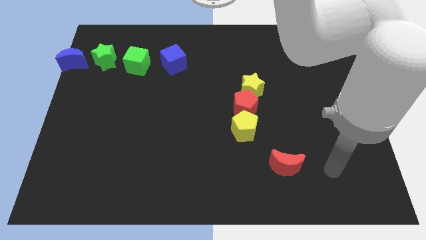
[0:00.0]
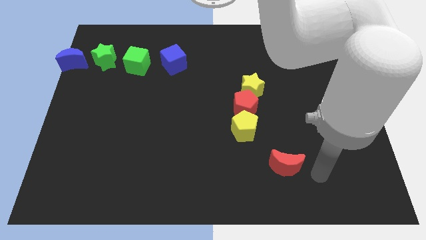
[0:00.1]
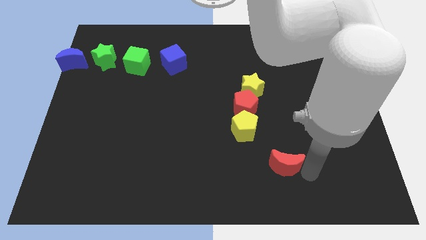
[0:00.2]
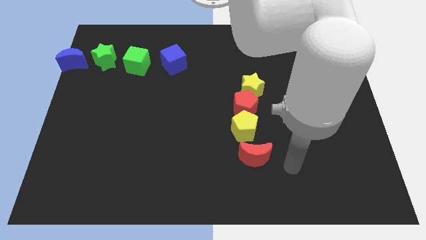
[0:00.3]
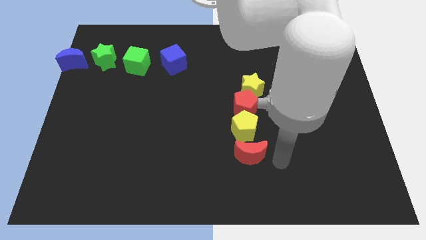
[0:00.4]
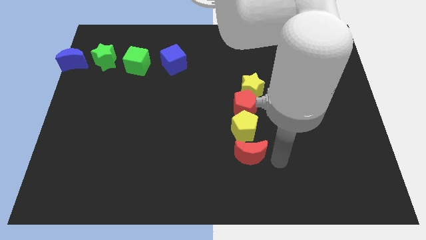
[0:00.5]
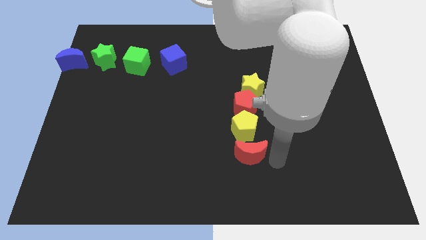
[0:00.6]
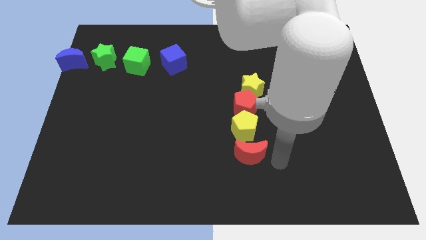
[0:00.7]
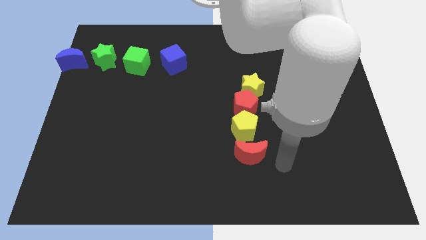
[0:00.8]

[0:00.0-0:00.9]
put the red moon at the bottom of yellow pentagon

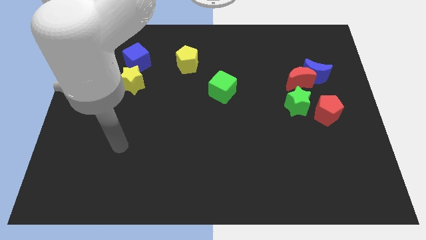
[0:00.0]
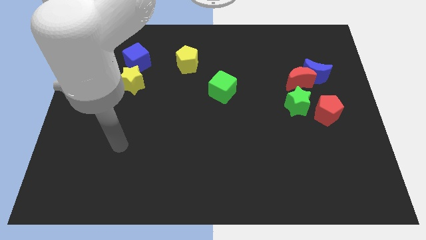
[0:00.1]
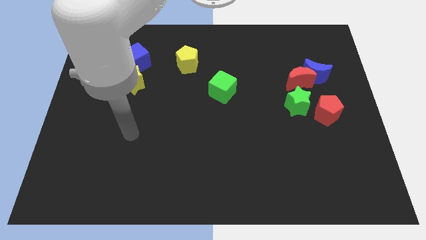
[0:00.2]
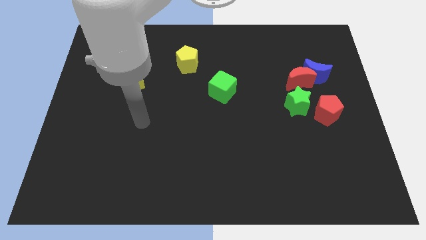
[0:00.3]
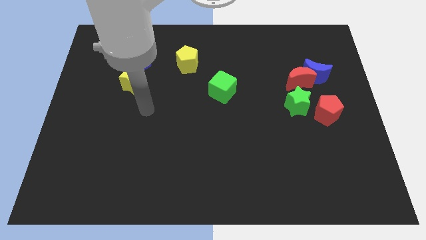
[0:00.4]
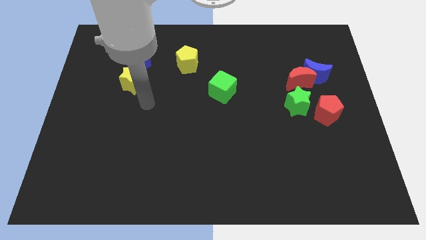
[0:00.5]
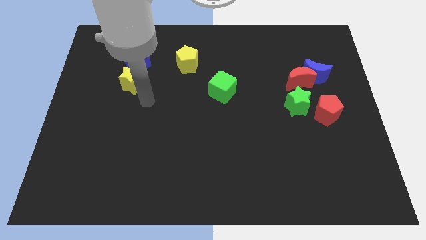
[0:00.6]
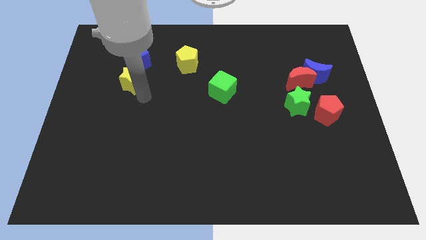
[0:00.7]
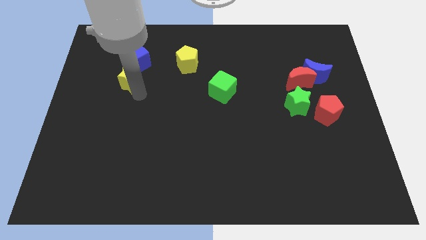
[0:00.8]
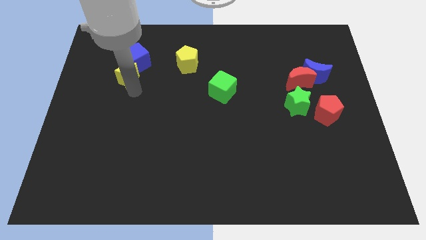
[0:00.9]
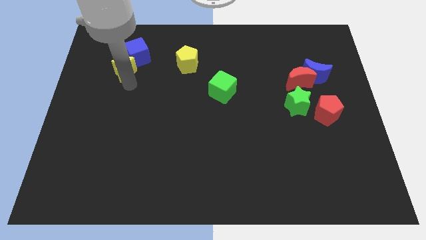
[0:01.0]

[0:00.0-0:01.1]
push the yellow star slightly to the top

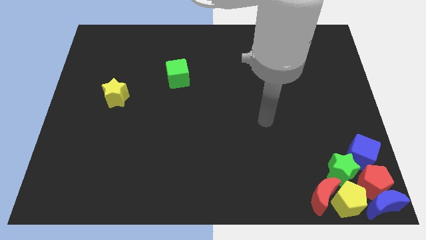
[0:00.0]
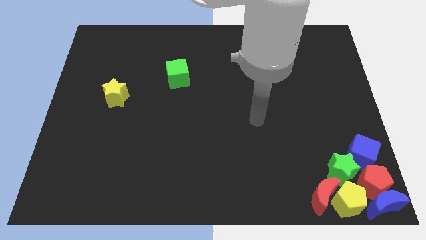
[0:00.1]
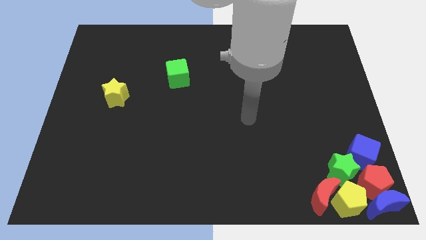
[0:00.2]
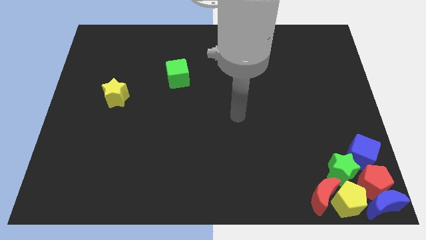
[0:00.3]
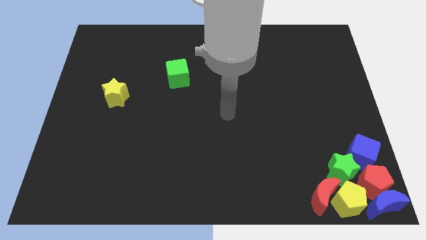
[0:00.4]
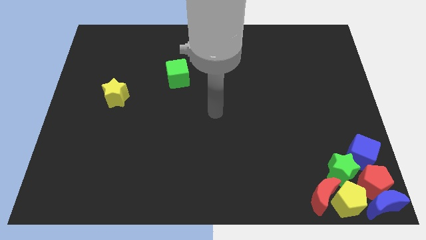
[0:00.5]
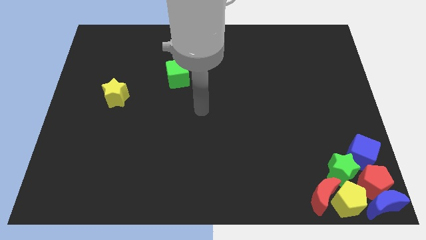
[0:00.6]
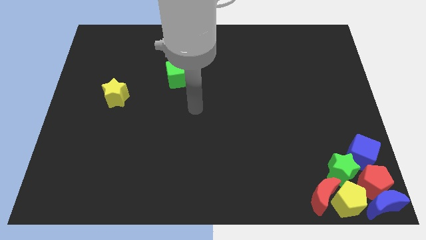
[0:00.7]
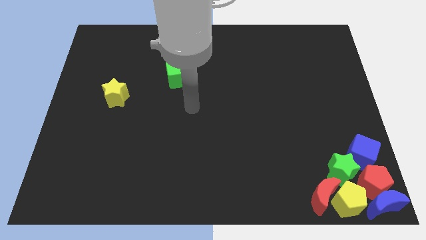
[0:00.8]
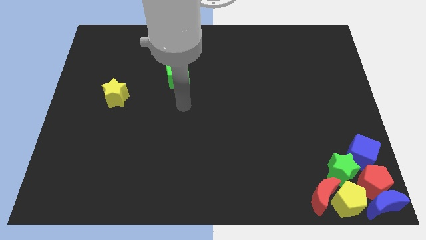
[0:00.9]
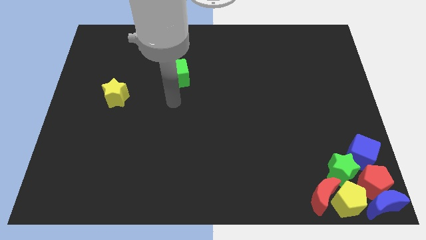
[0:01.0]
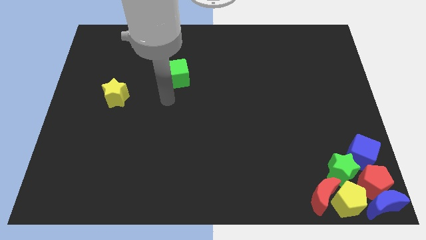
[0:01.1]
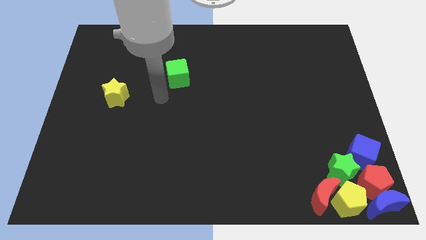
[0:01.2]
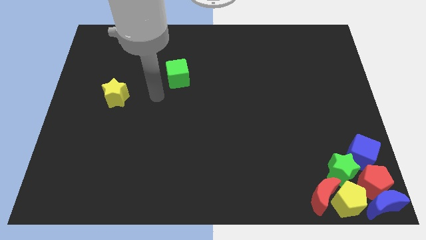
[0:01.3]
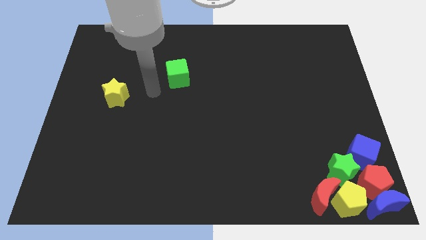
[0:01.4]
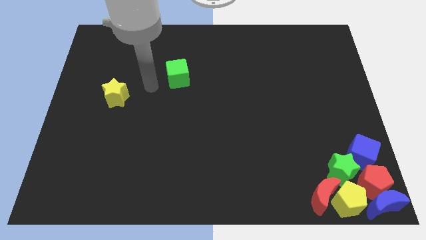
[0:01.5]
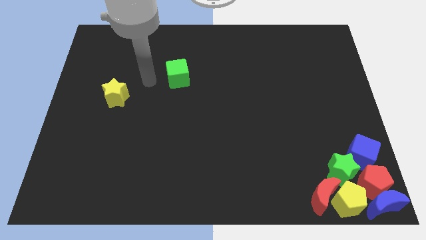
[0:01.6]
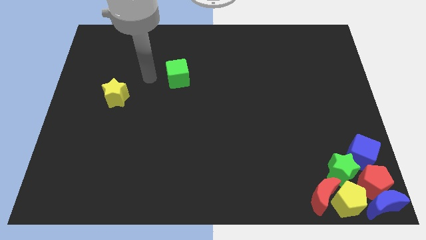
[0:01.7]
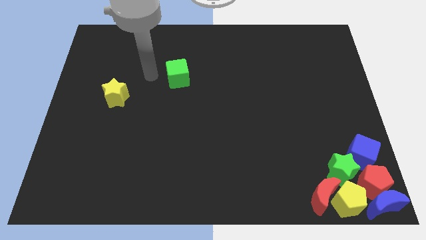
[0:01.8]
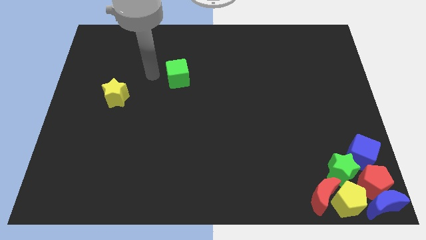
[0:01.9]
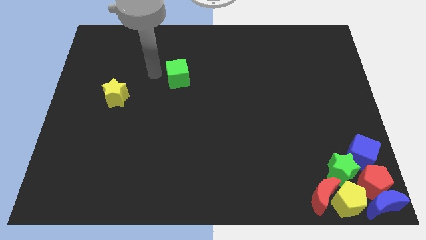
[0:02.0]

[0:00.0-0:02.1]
move your arm into the green cube

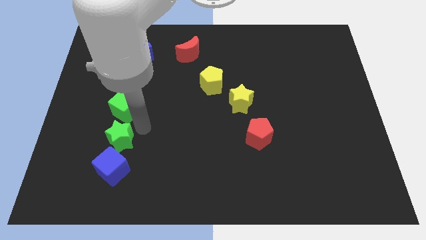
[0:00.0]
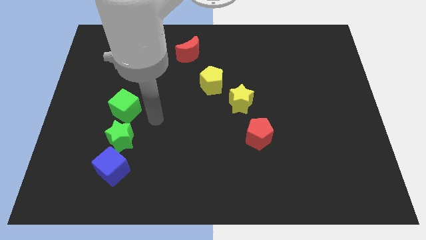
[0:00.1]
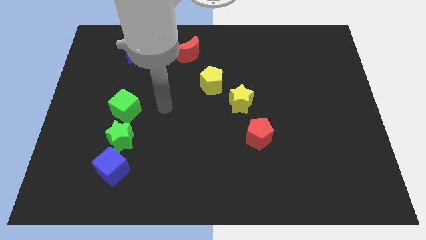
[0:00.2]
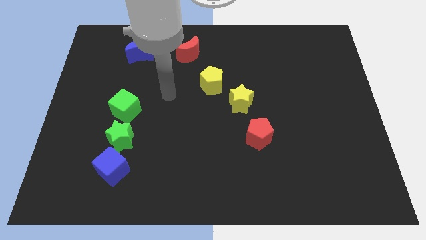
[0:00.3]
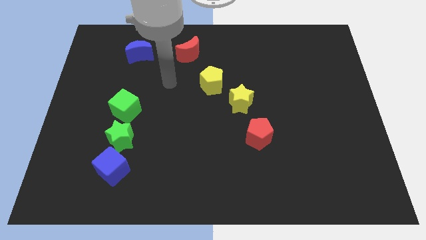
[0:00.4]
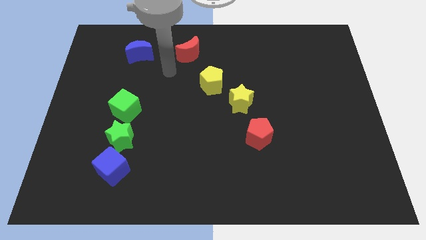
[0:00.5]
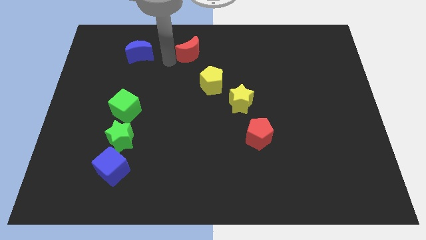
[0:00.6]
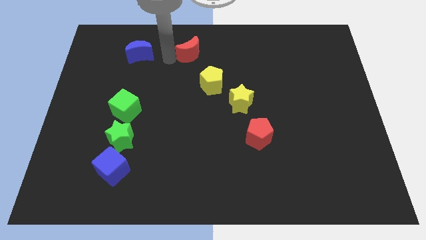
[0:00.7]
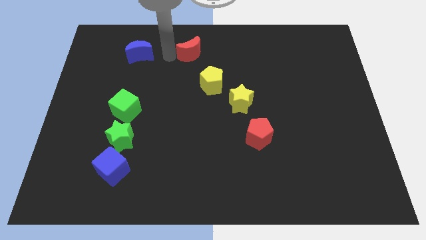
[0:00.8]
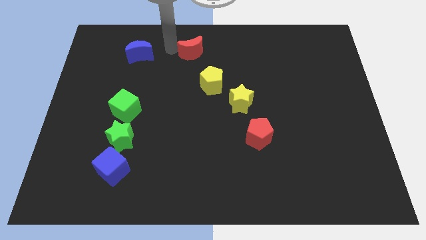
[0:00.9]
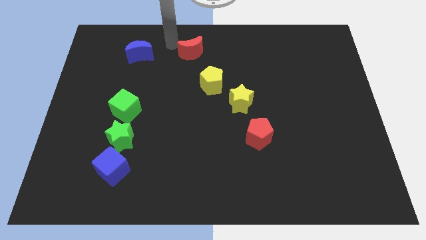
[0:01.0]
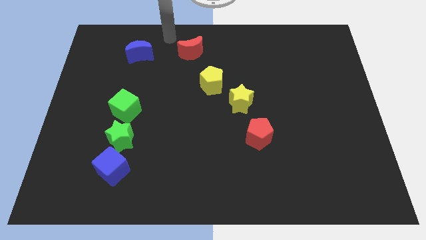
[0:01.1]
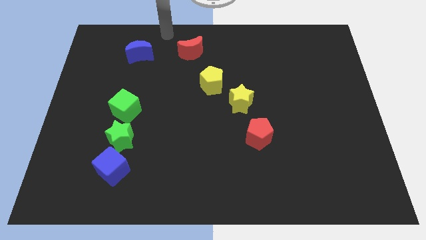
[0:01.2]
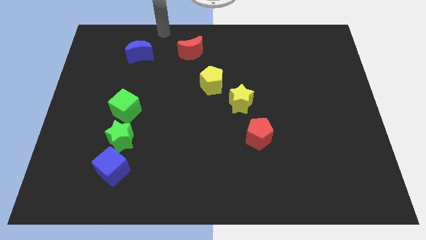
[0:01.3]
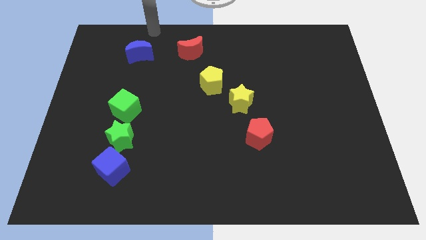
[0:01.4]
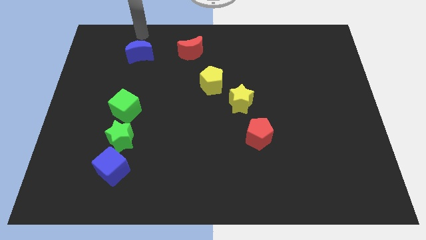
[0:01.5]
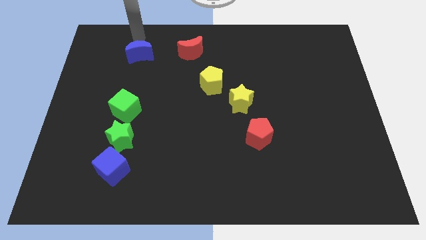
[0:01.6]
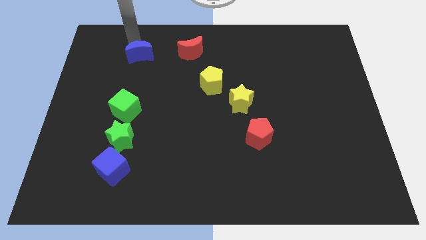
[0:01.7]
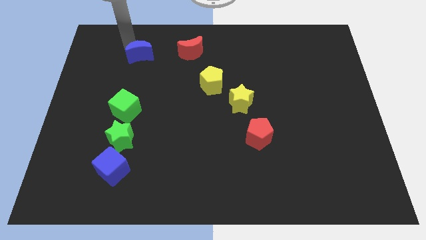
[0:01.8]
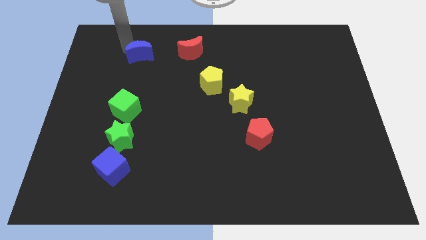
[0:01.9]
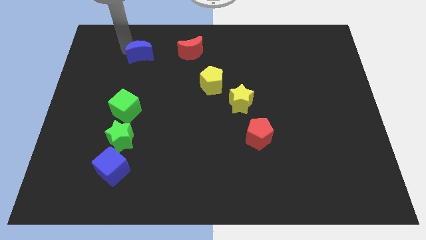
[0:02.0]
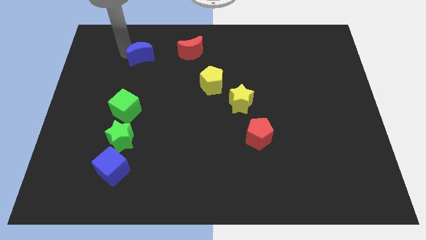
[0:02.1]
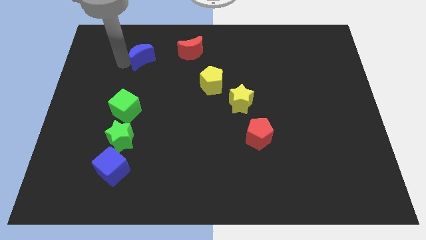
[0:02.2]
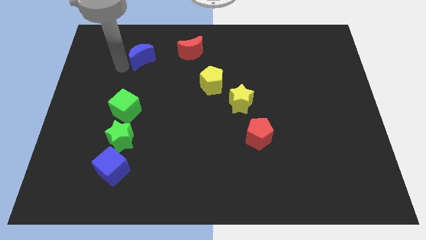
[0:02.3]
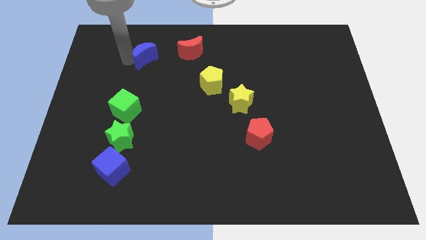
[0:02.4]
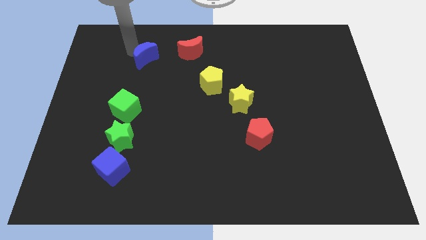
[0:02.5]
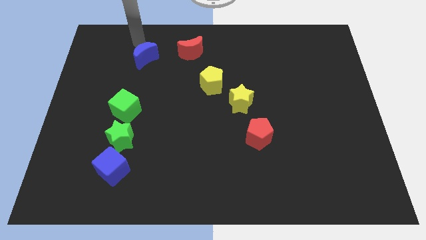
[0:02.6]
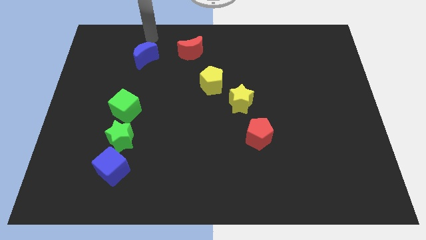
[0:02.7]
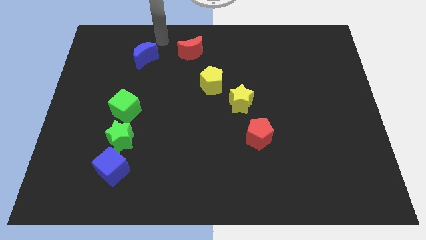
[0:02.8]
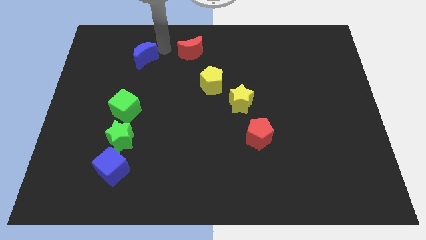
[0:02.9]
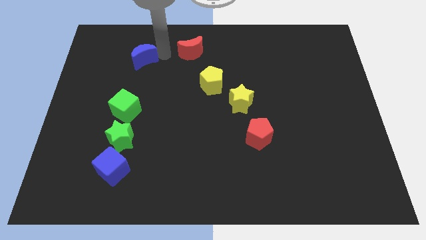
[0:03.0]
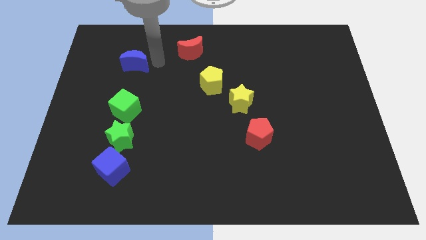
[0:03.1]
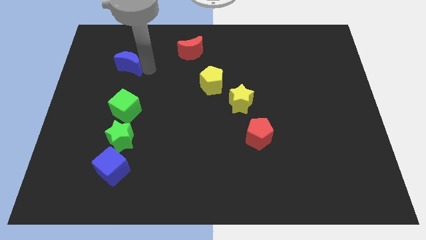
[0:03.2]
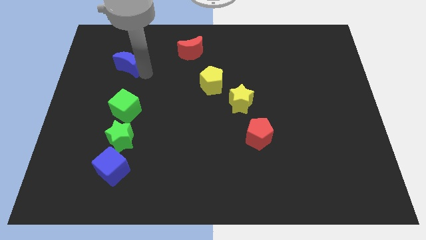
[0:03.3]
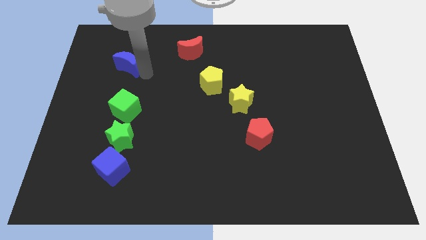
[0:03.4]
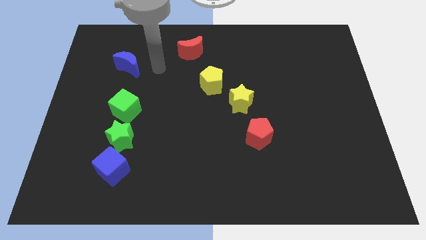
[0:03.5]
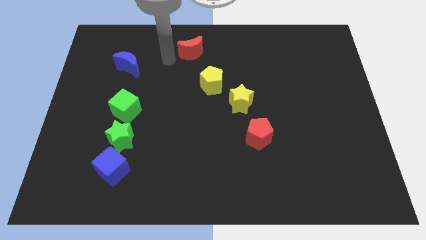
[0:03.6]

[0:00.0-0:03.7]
slide the blue moon to the top side of the green cube

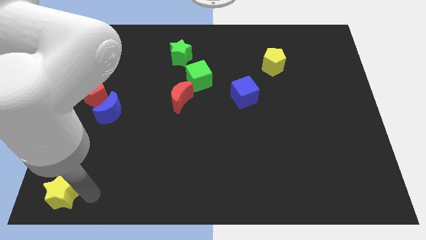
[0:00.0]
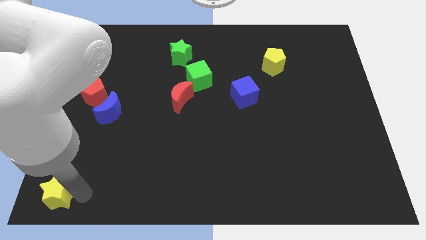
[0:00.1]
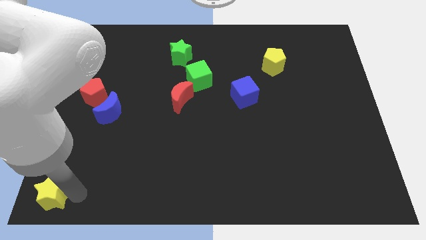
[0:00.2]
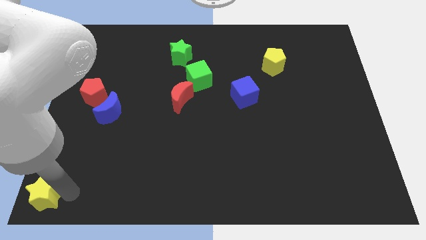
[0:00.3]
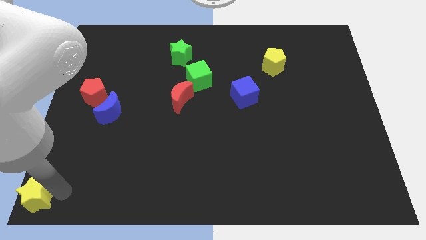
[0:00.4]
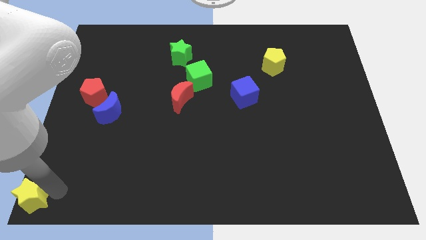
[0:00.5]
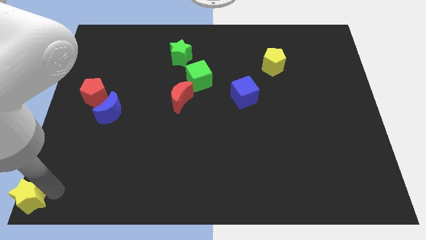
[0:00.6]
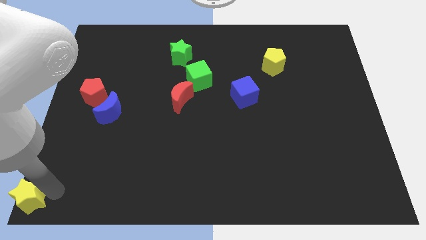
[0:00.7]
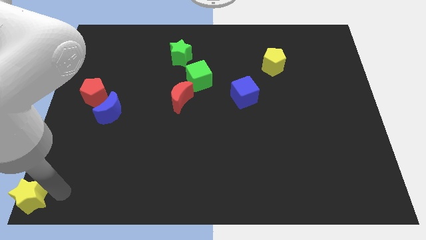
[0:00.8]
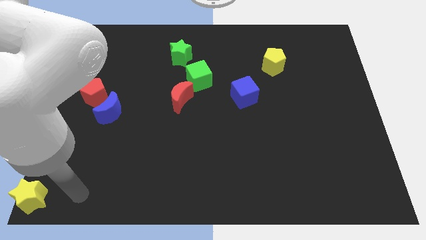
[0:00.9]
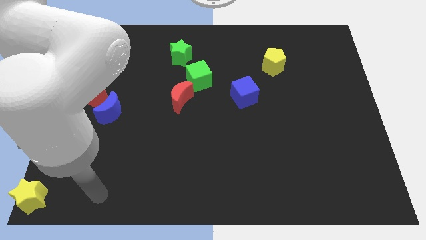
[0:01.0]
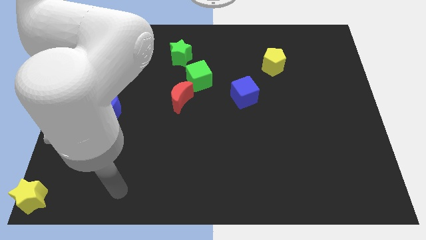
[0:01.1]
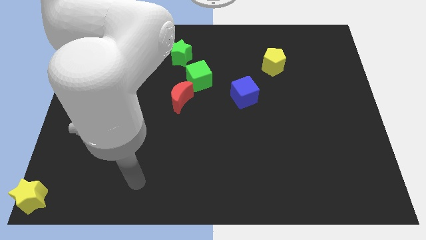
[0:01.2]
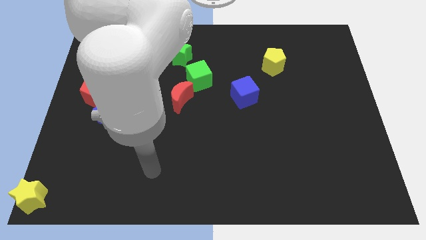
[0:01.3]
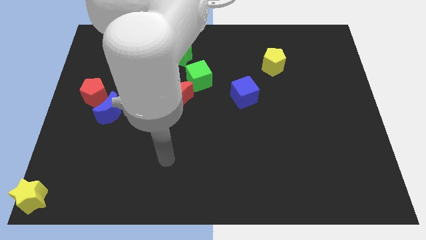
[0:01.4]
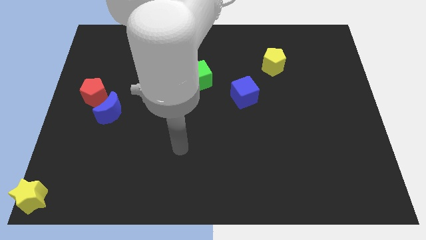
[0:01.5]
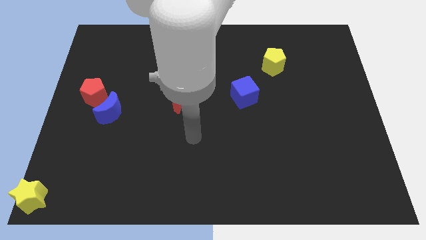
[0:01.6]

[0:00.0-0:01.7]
move the yellow star to the bottom left of the board
